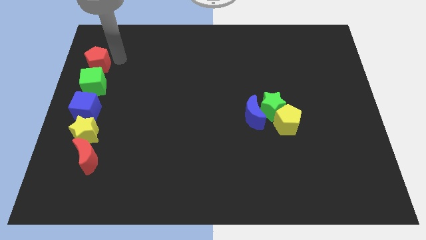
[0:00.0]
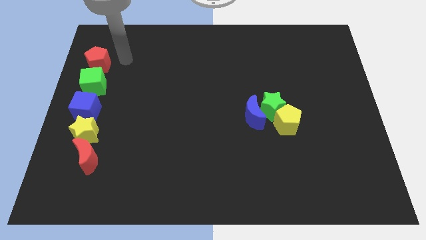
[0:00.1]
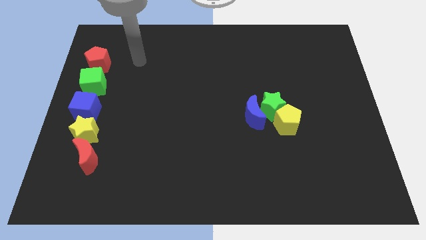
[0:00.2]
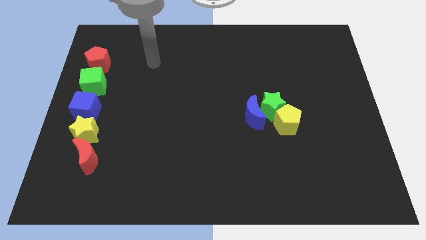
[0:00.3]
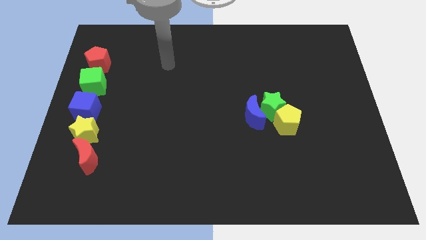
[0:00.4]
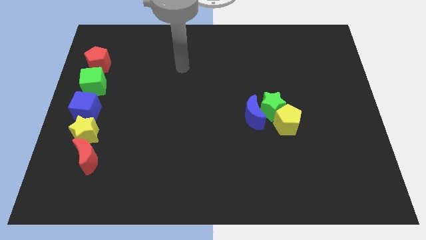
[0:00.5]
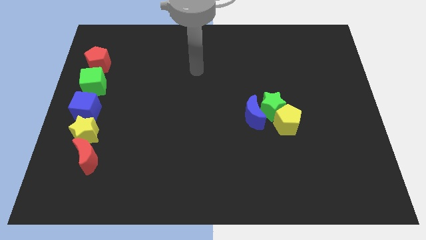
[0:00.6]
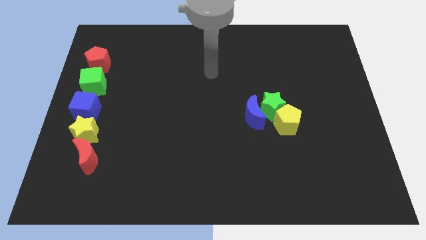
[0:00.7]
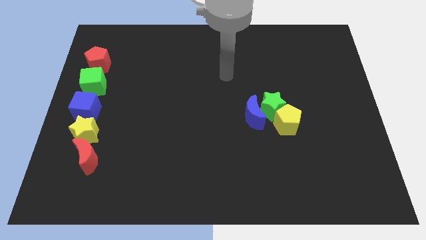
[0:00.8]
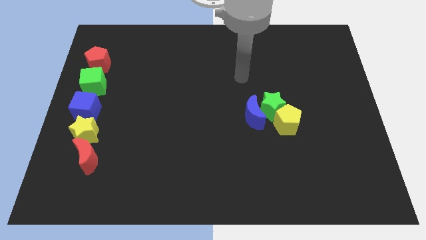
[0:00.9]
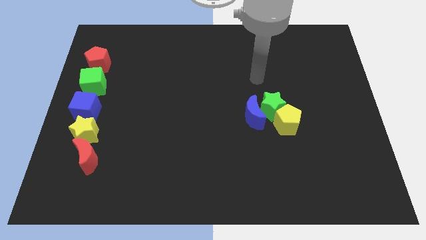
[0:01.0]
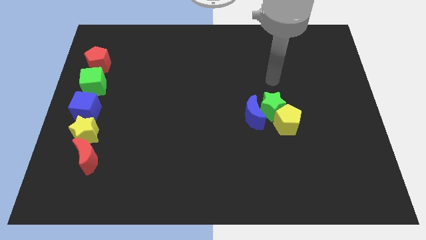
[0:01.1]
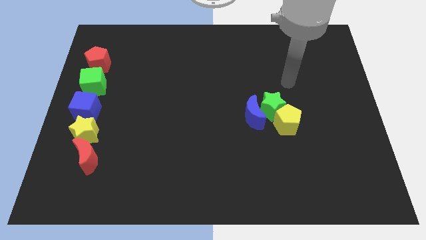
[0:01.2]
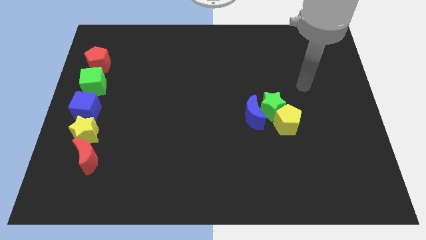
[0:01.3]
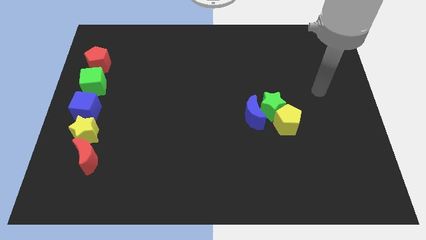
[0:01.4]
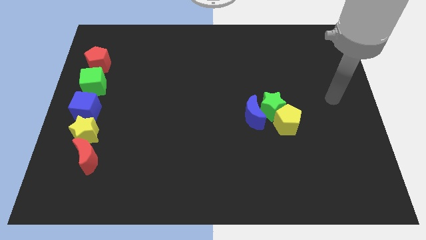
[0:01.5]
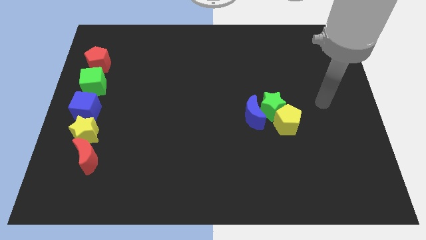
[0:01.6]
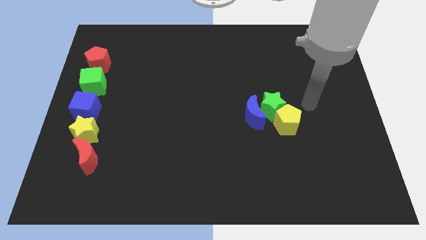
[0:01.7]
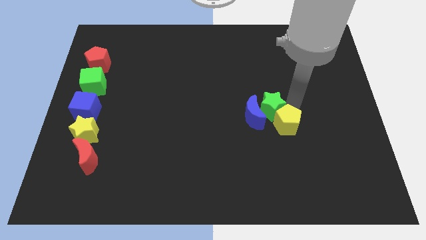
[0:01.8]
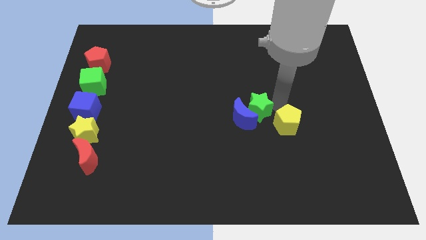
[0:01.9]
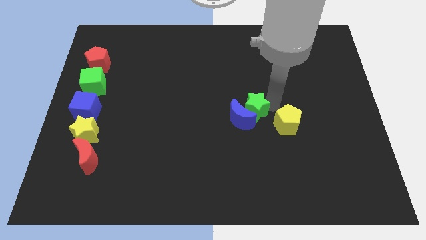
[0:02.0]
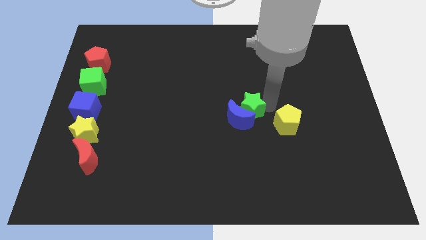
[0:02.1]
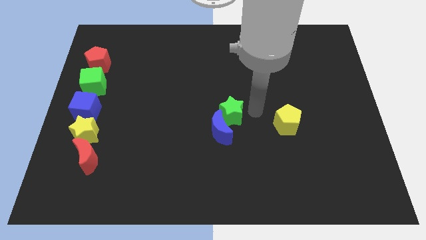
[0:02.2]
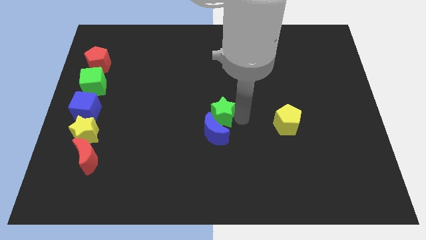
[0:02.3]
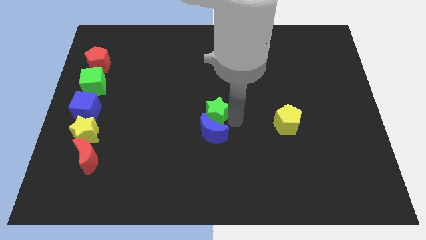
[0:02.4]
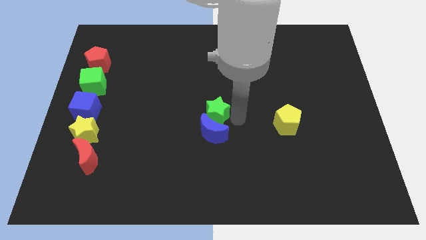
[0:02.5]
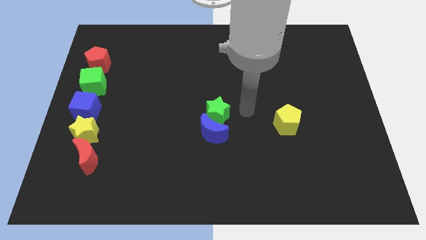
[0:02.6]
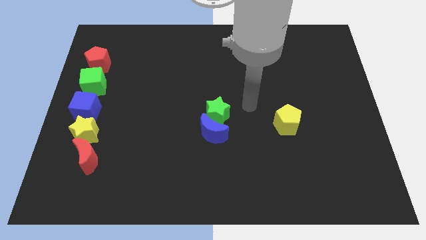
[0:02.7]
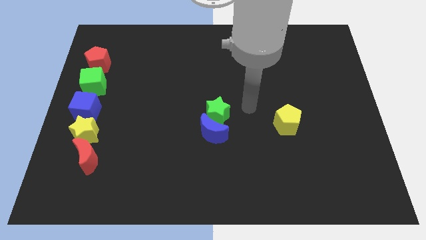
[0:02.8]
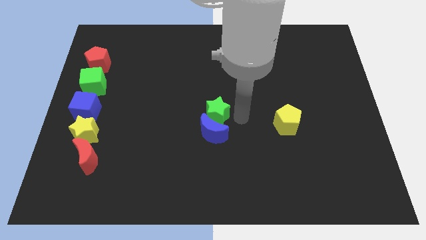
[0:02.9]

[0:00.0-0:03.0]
push the blue crescent with green star to the center of the board

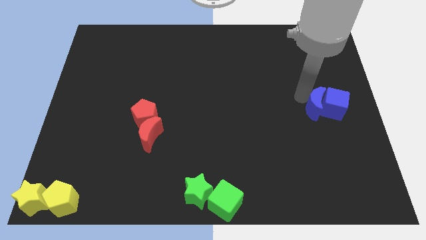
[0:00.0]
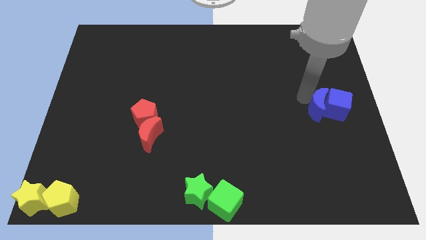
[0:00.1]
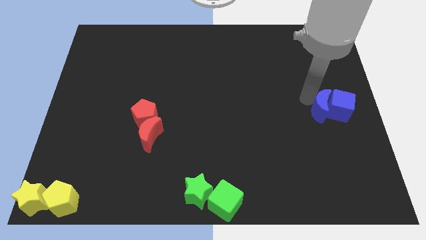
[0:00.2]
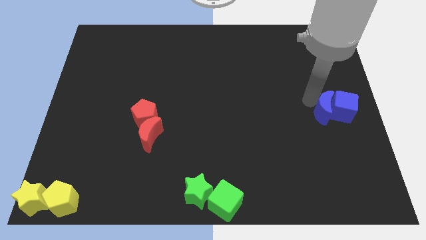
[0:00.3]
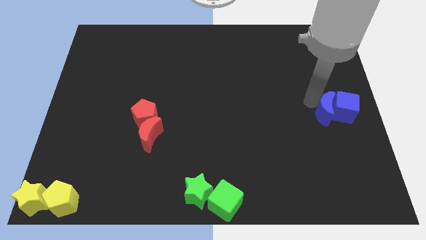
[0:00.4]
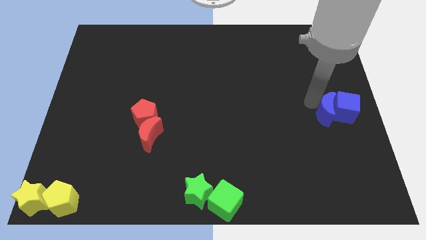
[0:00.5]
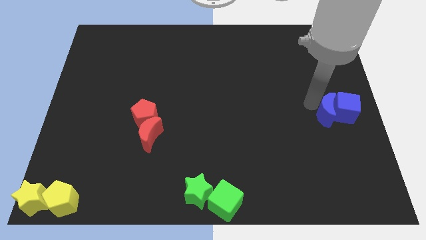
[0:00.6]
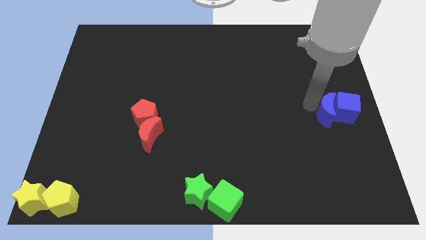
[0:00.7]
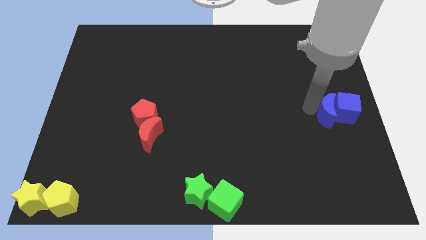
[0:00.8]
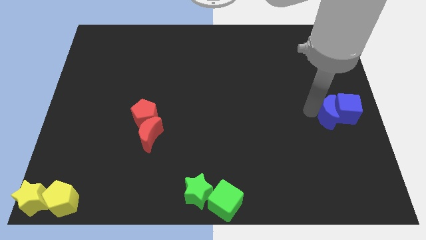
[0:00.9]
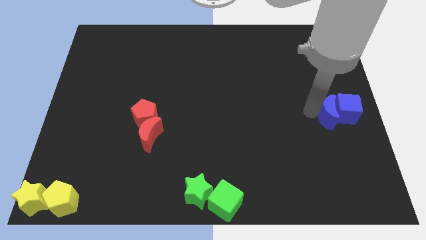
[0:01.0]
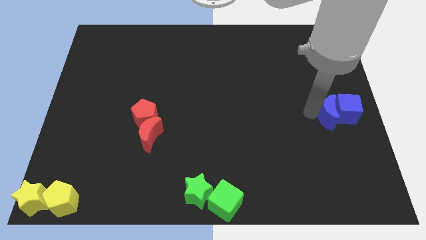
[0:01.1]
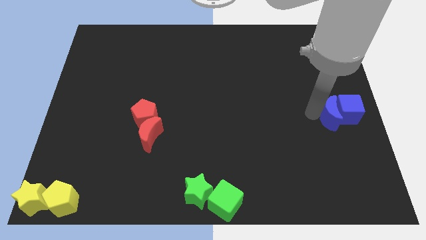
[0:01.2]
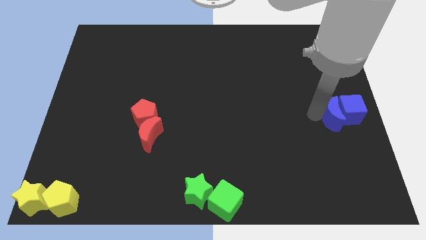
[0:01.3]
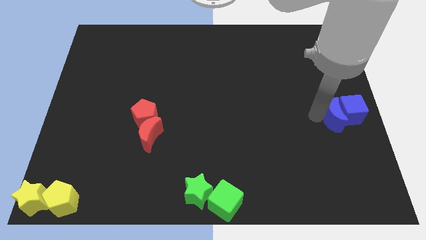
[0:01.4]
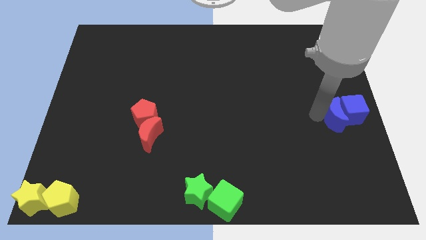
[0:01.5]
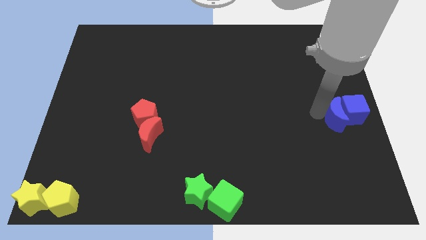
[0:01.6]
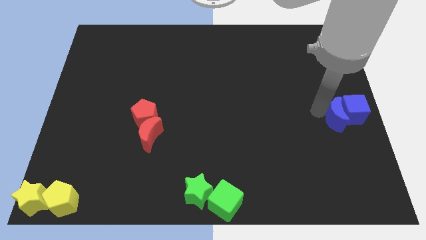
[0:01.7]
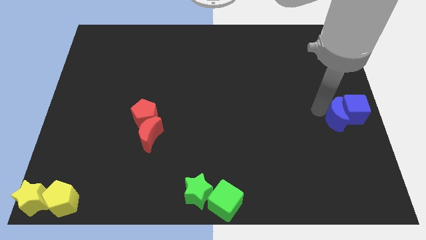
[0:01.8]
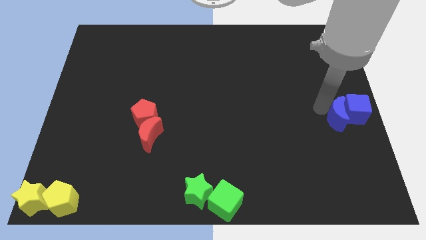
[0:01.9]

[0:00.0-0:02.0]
place blue cube and blue crescent to the center right of the board

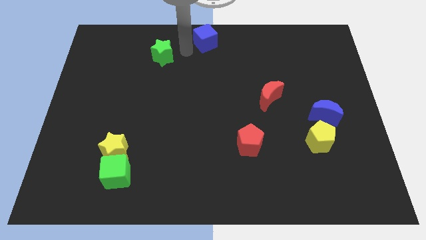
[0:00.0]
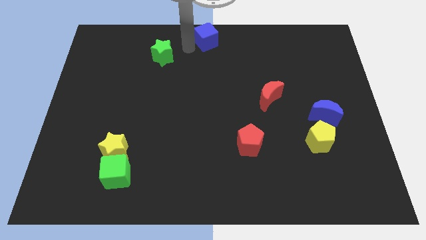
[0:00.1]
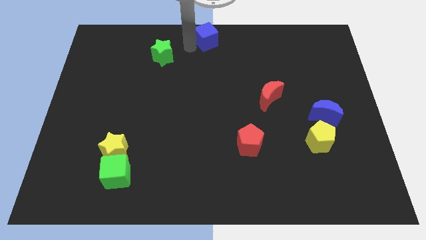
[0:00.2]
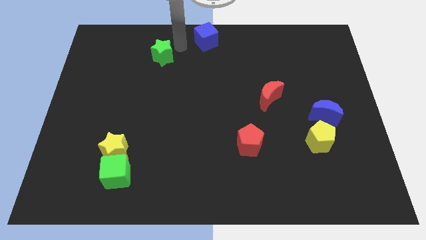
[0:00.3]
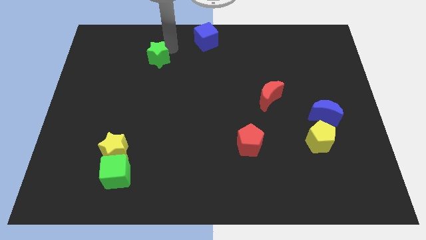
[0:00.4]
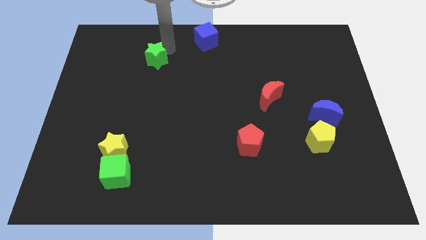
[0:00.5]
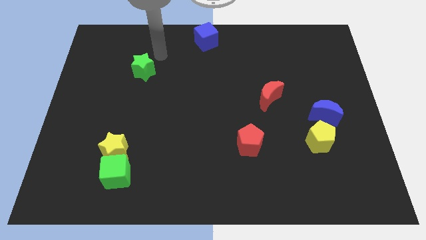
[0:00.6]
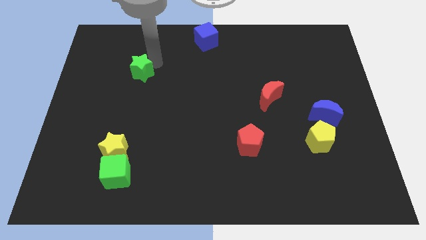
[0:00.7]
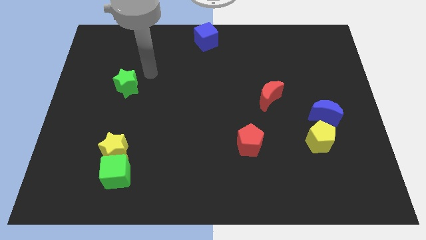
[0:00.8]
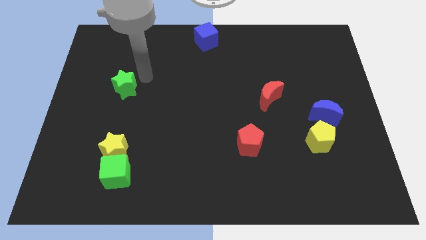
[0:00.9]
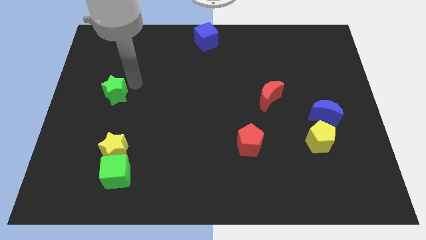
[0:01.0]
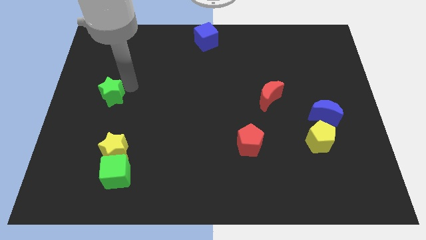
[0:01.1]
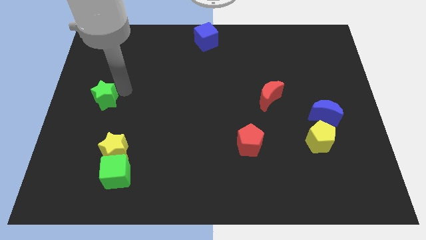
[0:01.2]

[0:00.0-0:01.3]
place the green star above the yellow star

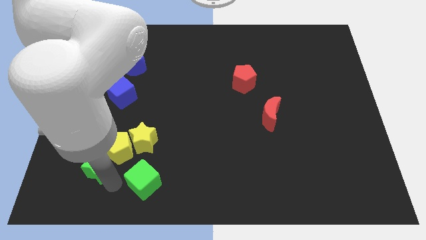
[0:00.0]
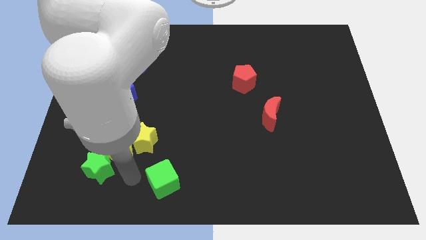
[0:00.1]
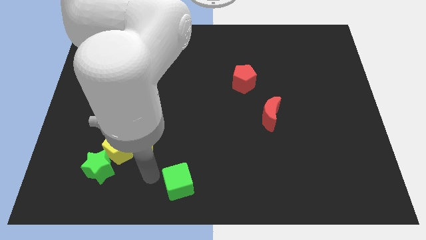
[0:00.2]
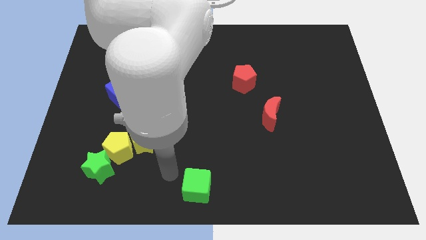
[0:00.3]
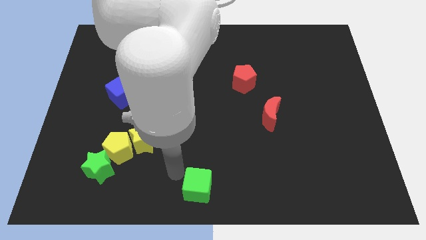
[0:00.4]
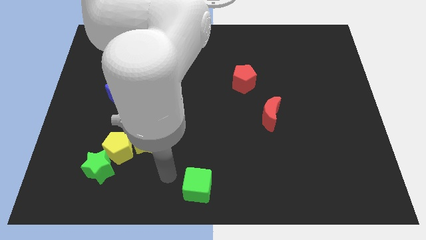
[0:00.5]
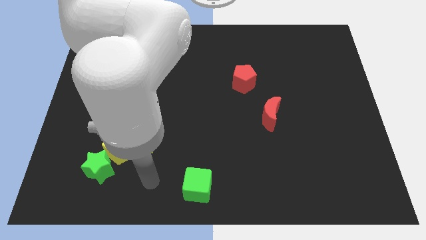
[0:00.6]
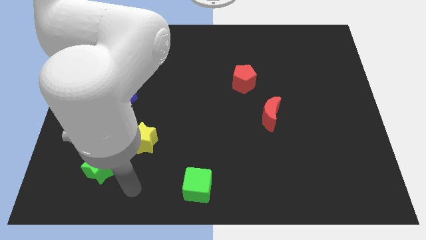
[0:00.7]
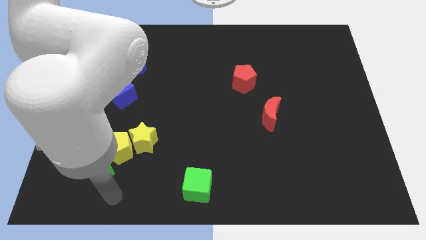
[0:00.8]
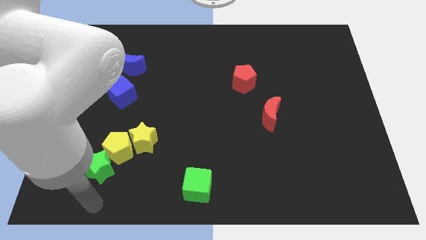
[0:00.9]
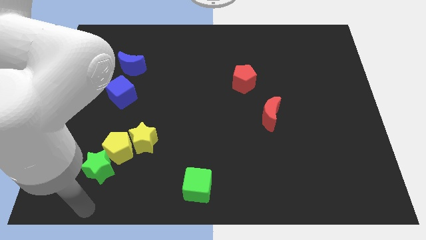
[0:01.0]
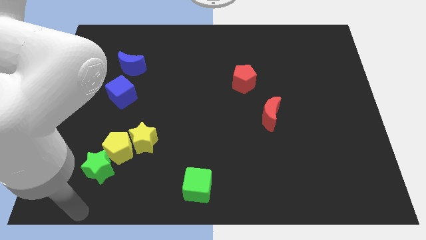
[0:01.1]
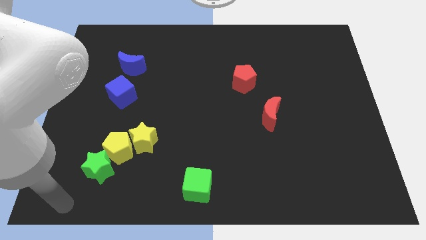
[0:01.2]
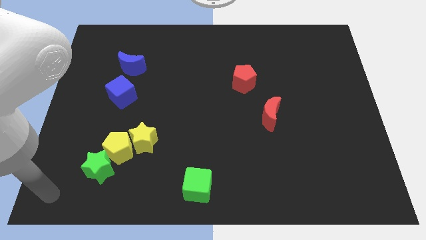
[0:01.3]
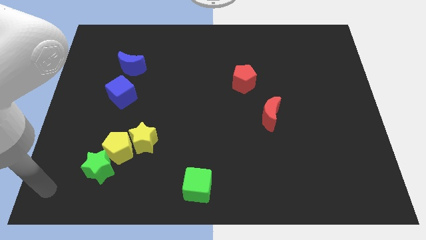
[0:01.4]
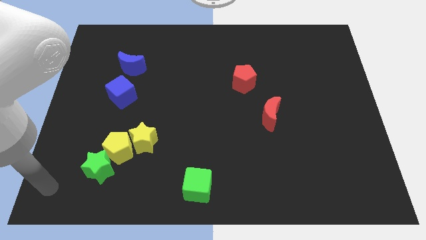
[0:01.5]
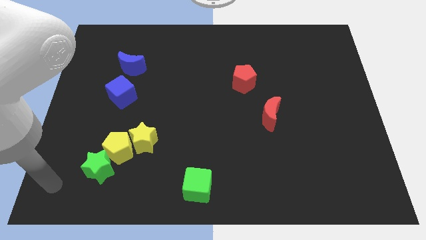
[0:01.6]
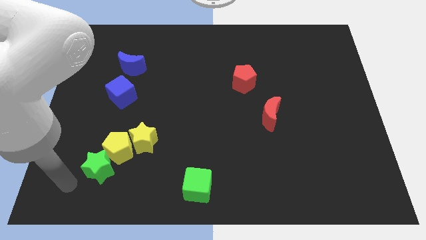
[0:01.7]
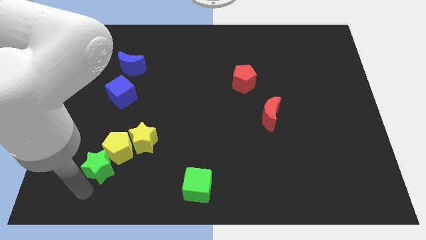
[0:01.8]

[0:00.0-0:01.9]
push the green cube towards the bottom center of the board

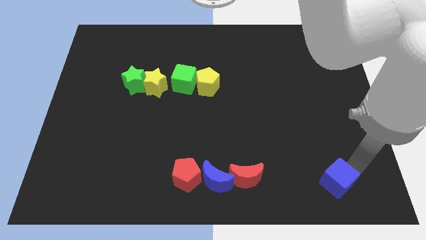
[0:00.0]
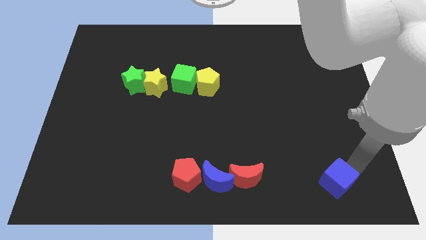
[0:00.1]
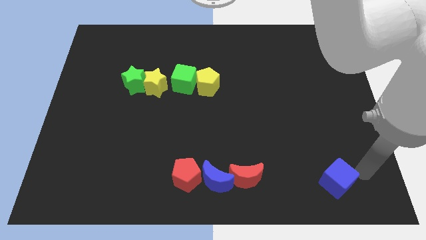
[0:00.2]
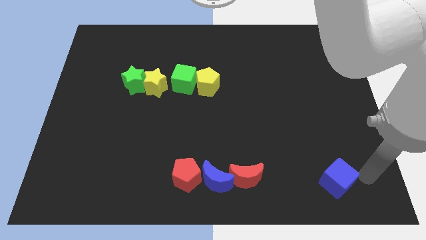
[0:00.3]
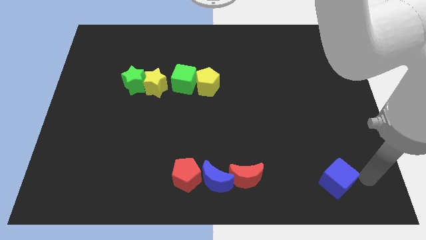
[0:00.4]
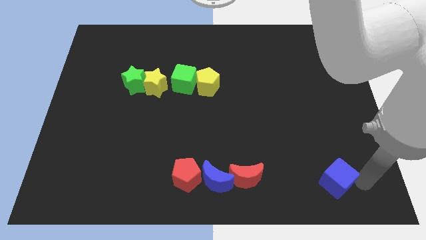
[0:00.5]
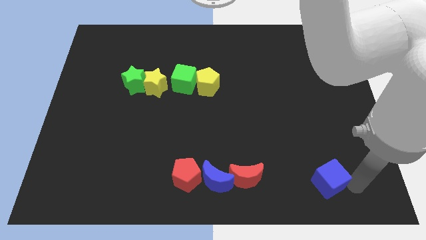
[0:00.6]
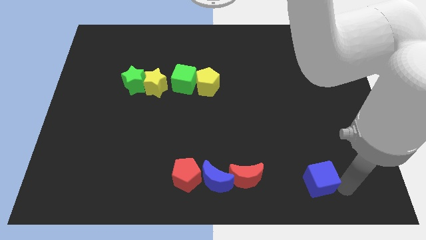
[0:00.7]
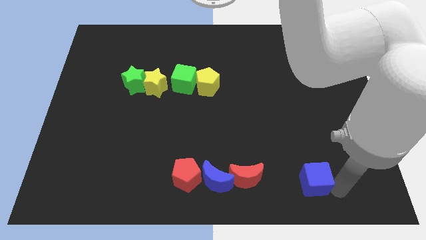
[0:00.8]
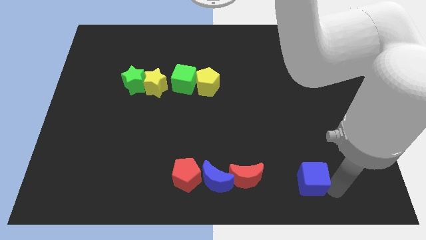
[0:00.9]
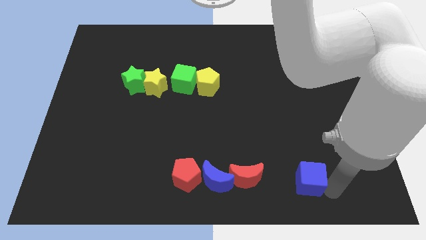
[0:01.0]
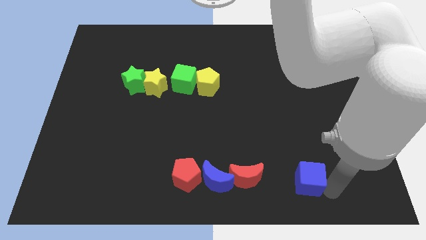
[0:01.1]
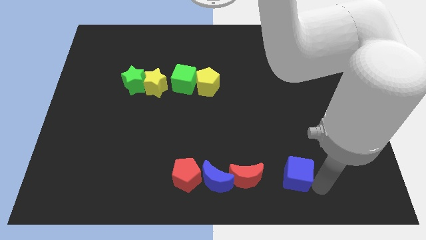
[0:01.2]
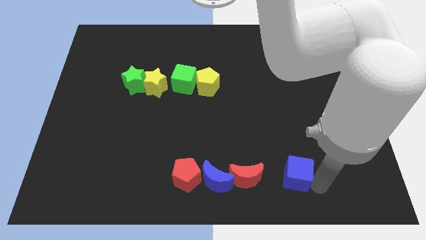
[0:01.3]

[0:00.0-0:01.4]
slide the blue moon towards the bottom center
